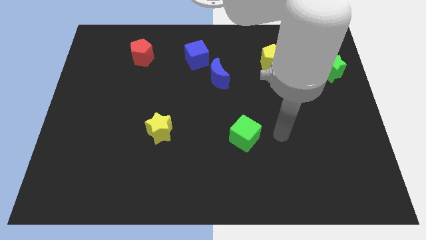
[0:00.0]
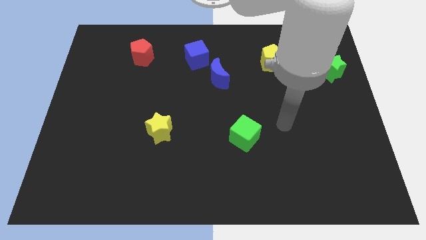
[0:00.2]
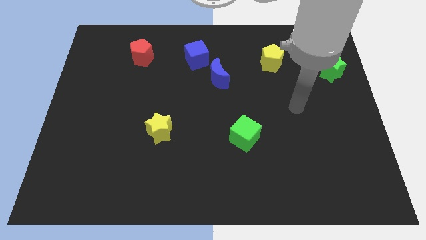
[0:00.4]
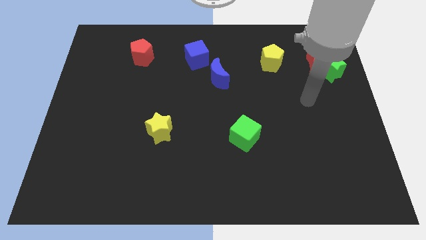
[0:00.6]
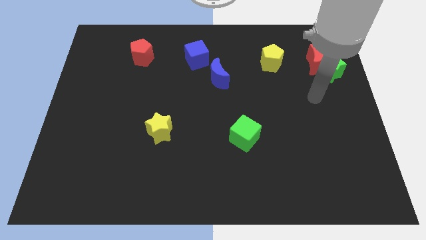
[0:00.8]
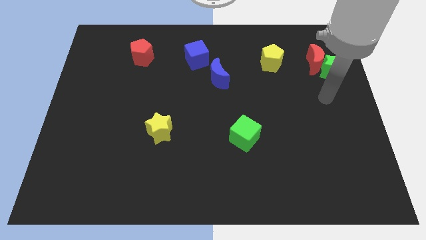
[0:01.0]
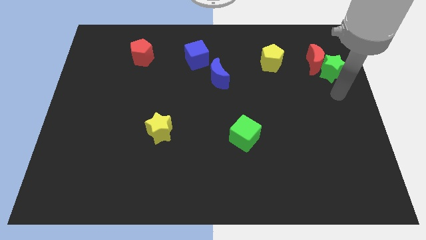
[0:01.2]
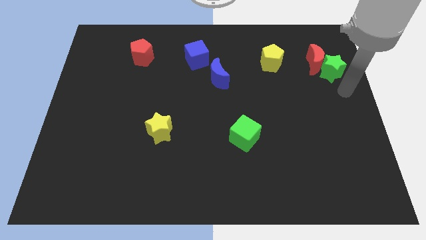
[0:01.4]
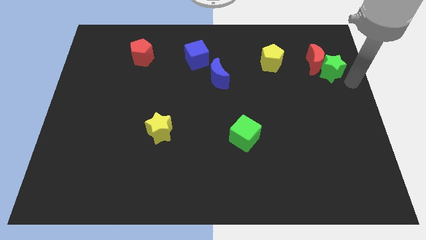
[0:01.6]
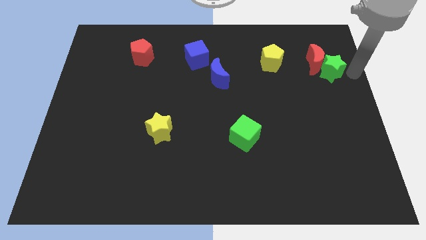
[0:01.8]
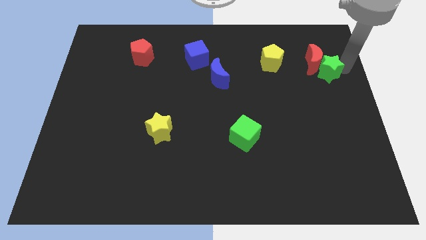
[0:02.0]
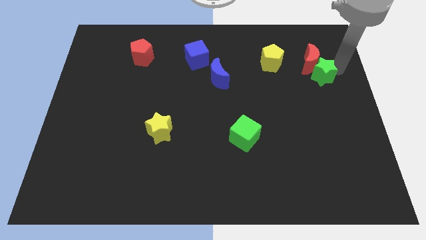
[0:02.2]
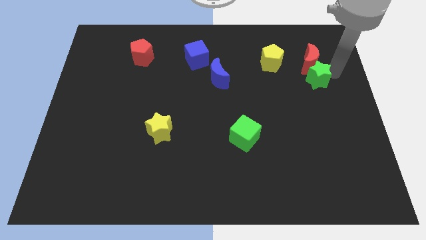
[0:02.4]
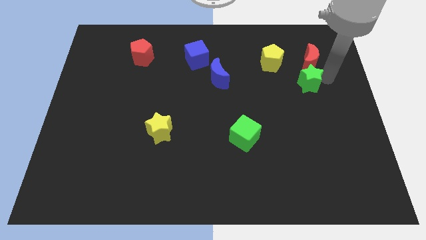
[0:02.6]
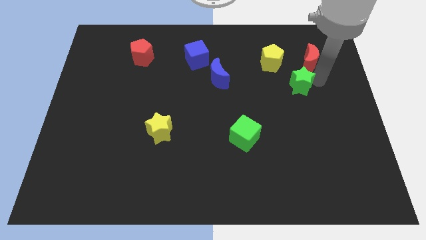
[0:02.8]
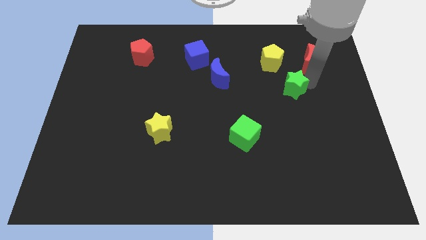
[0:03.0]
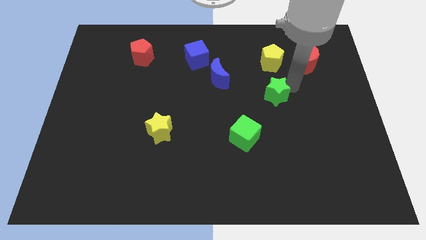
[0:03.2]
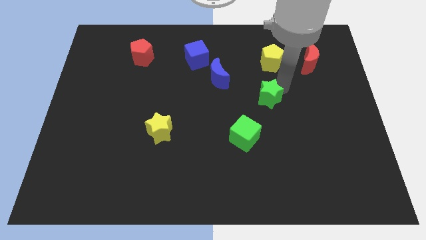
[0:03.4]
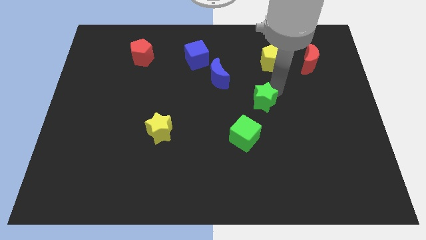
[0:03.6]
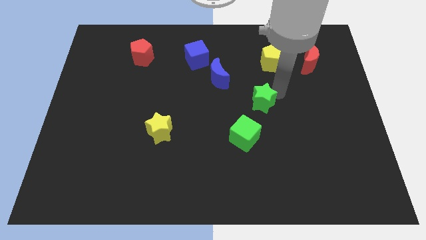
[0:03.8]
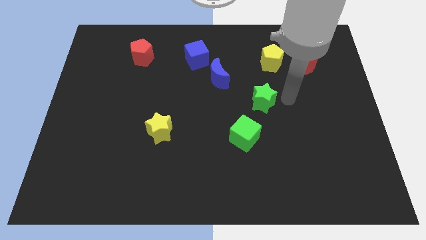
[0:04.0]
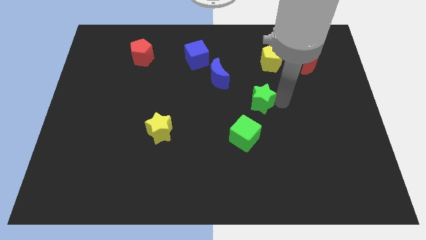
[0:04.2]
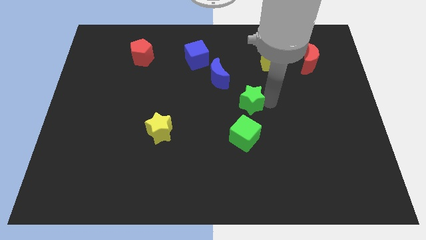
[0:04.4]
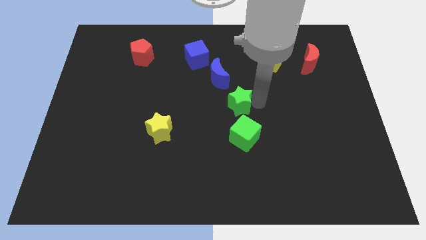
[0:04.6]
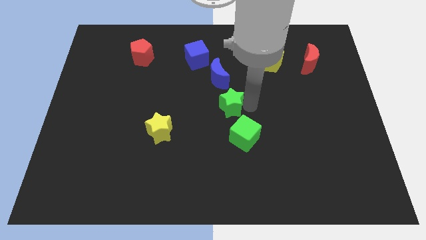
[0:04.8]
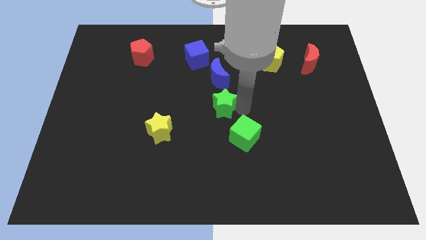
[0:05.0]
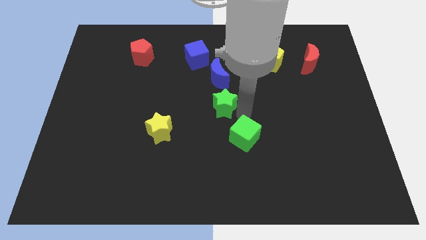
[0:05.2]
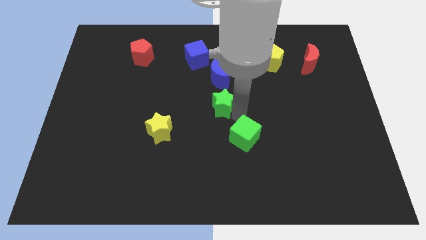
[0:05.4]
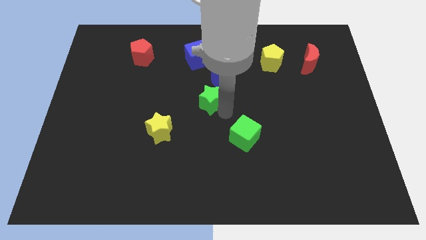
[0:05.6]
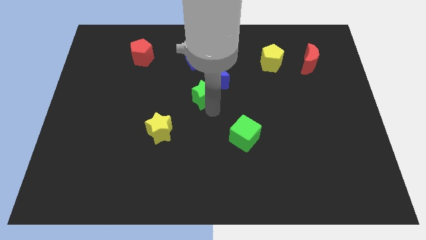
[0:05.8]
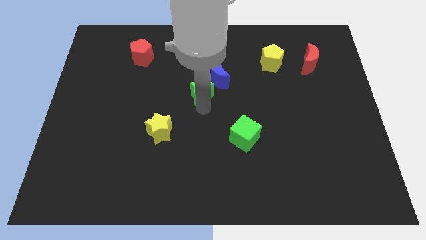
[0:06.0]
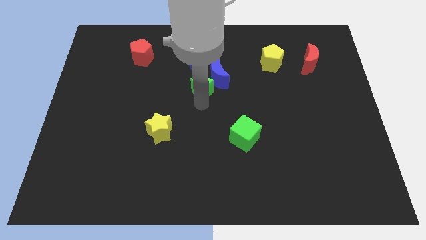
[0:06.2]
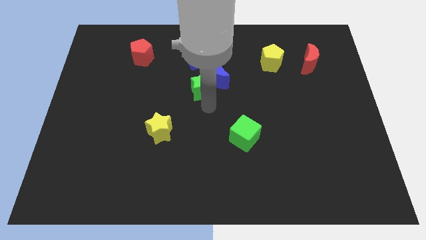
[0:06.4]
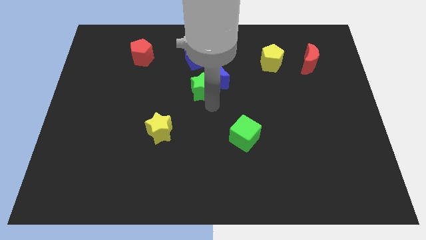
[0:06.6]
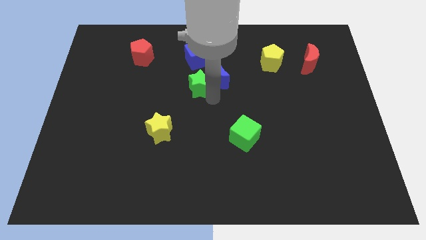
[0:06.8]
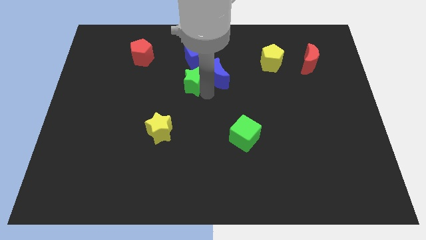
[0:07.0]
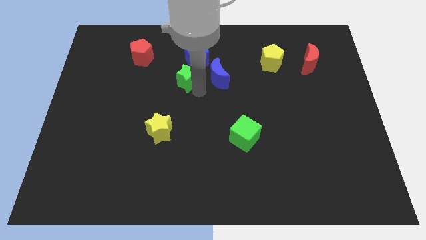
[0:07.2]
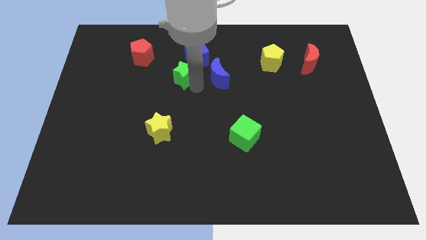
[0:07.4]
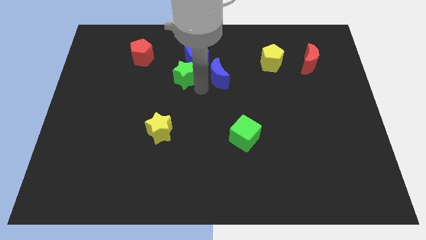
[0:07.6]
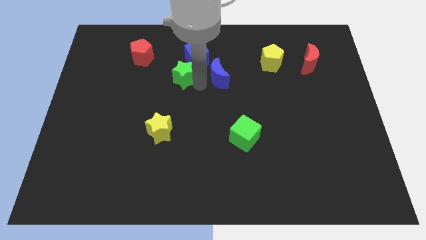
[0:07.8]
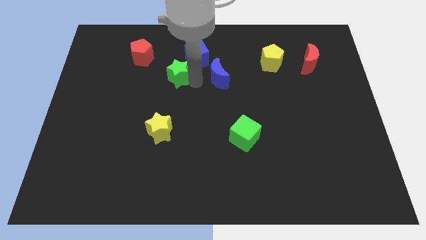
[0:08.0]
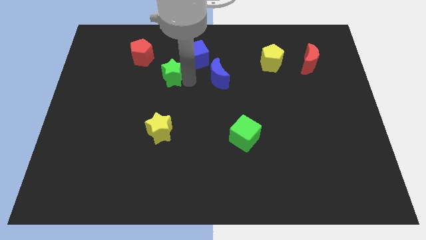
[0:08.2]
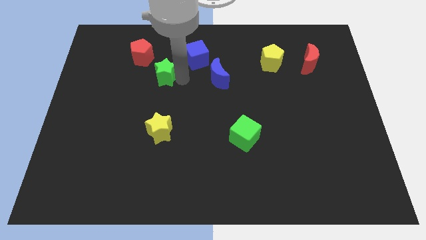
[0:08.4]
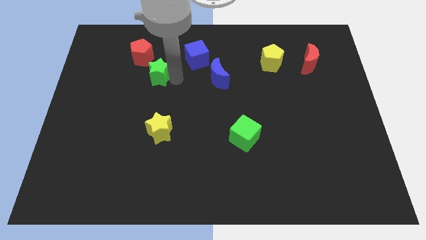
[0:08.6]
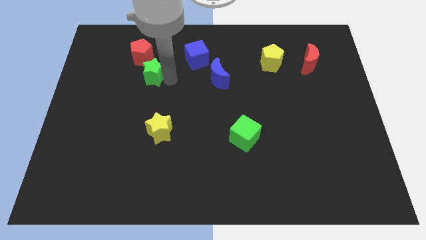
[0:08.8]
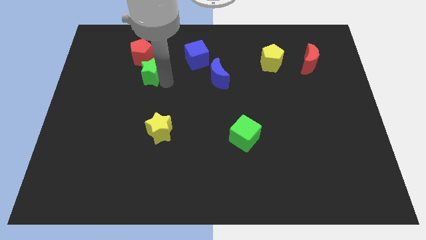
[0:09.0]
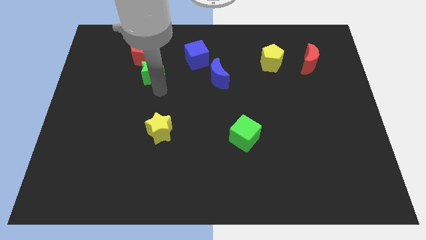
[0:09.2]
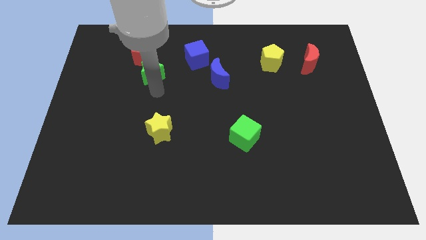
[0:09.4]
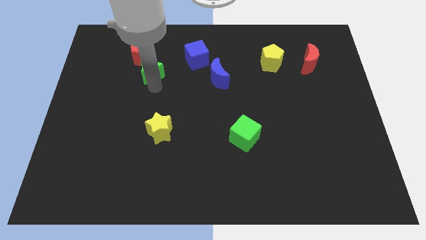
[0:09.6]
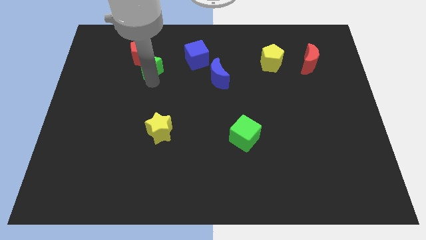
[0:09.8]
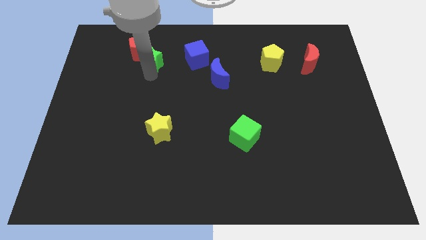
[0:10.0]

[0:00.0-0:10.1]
push the green star close to the red pentagon

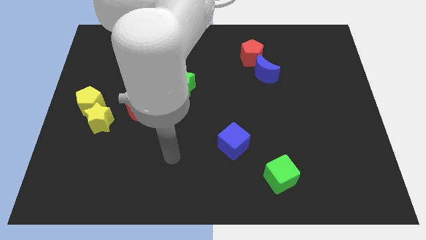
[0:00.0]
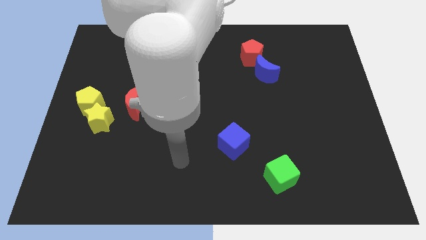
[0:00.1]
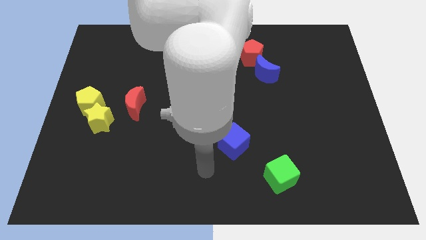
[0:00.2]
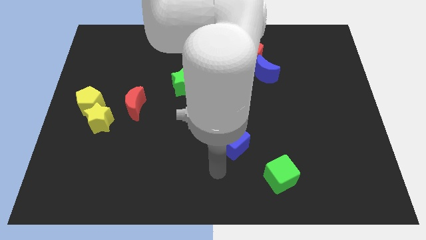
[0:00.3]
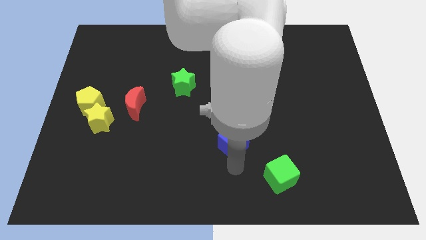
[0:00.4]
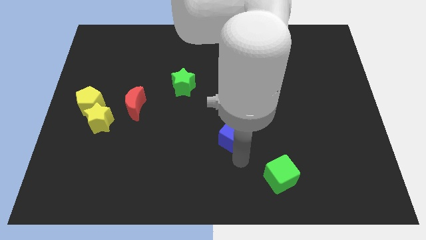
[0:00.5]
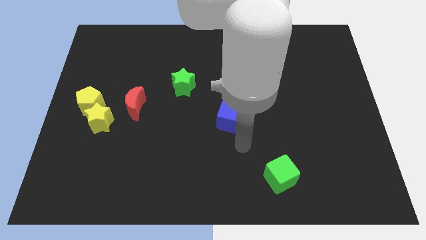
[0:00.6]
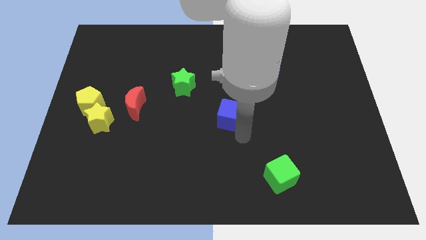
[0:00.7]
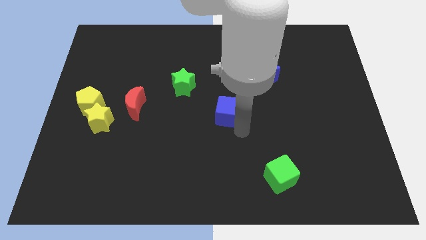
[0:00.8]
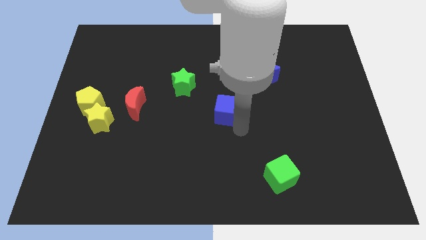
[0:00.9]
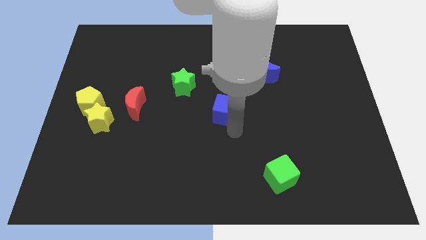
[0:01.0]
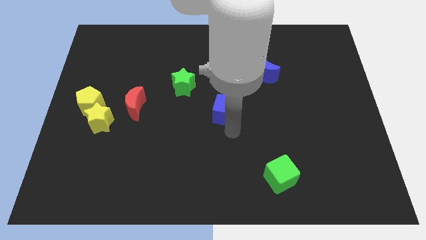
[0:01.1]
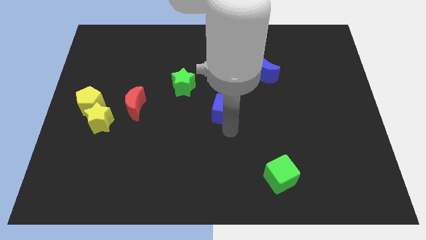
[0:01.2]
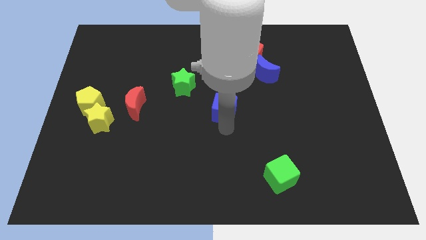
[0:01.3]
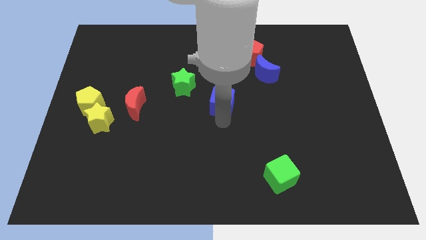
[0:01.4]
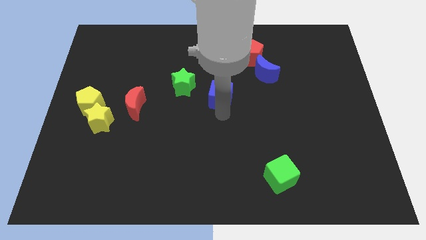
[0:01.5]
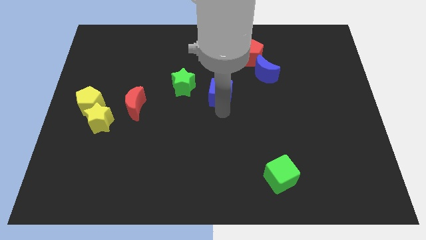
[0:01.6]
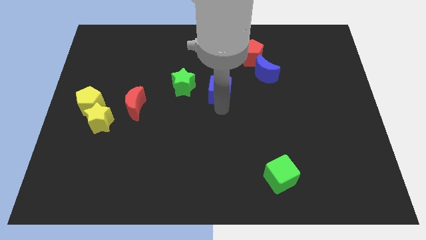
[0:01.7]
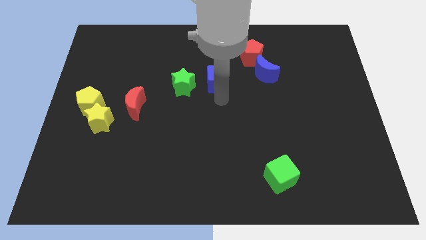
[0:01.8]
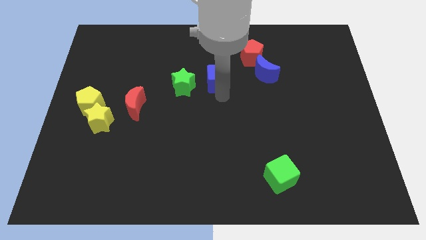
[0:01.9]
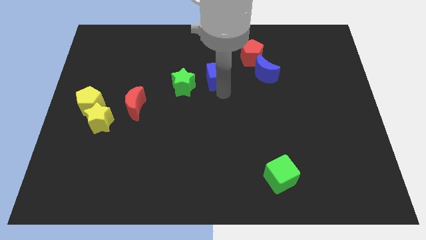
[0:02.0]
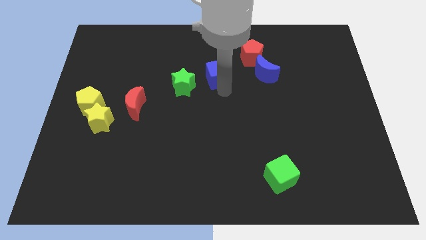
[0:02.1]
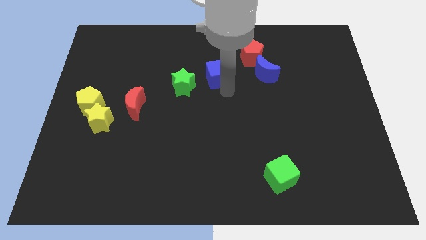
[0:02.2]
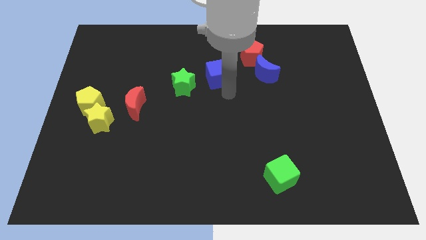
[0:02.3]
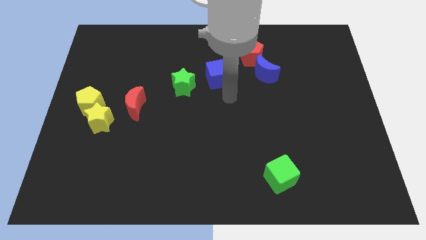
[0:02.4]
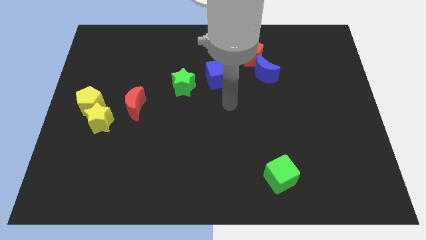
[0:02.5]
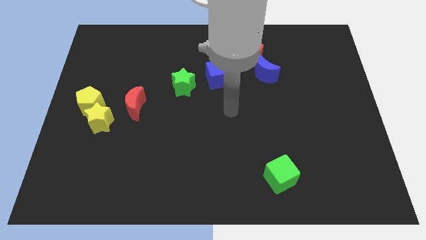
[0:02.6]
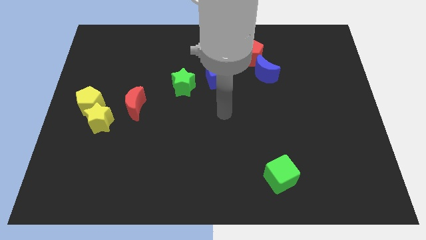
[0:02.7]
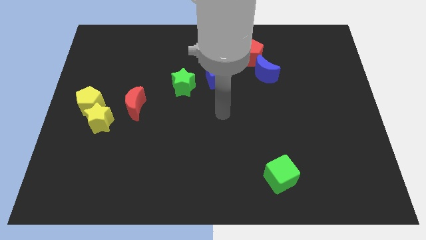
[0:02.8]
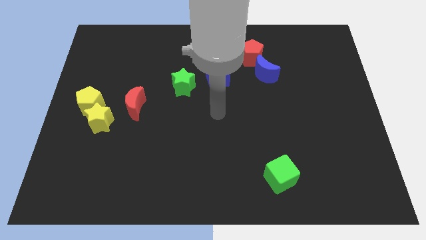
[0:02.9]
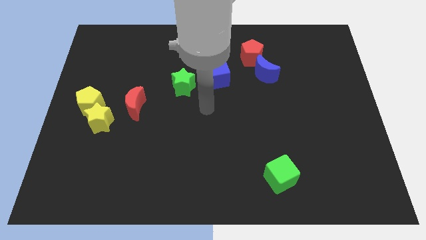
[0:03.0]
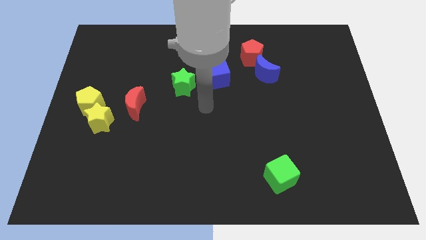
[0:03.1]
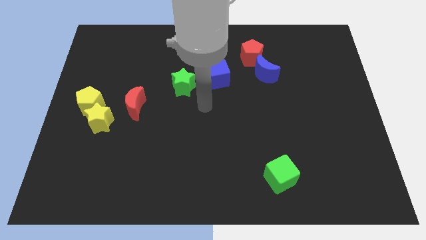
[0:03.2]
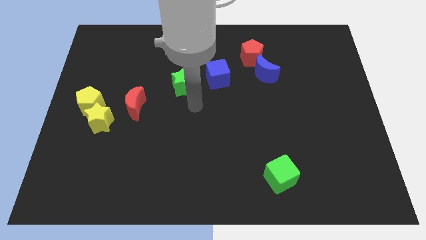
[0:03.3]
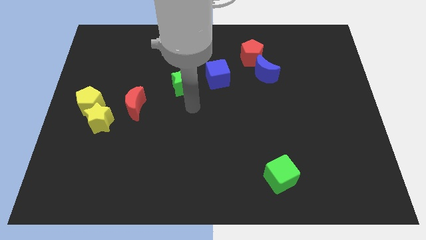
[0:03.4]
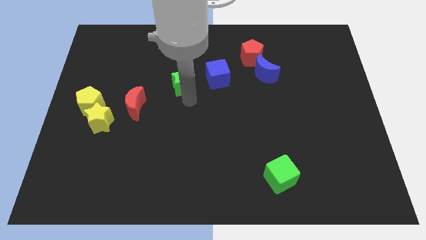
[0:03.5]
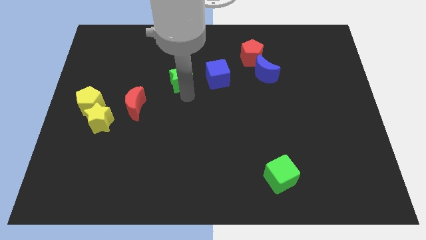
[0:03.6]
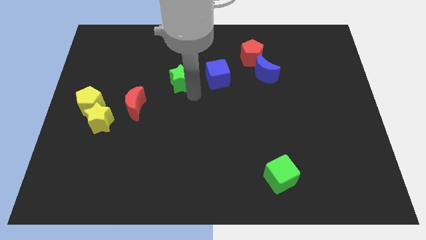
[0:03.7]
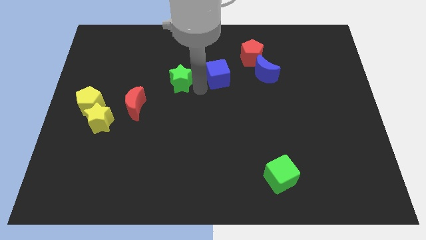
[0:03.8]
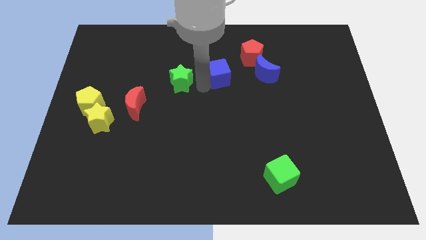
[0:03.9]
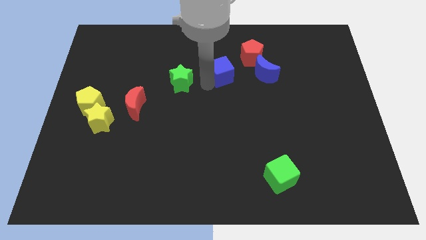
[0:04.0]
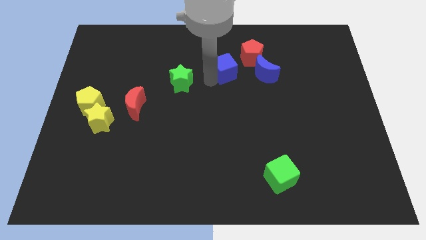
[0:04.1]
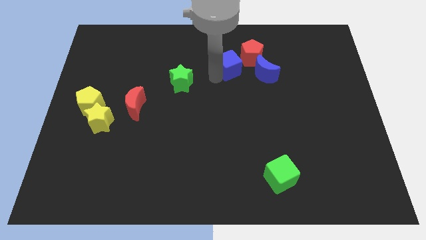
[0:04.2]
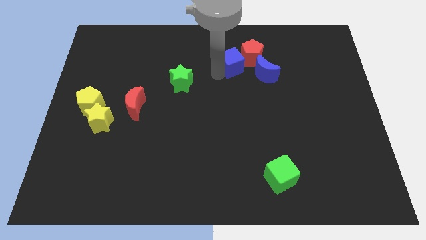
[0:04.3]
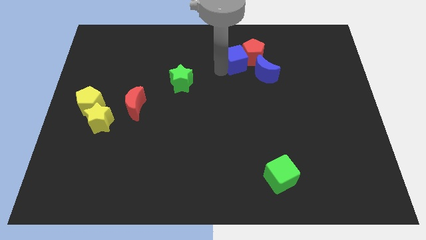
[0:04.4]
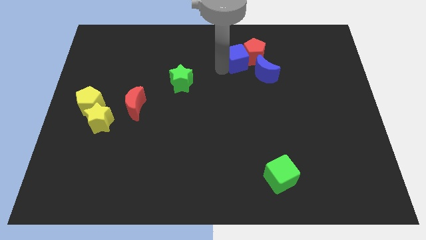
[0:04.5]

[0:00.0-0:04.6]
push the blue cube towards the red pentagon
